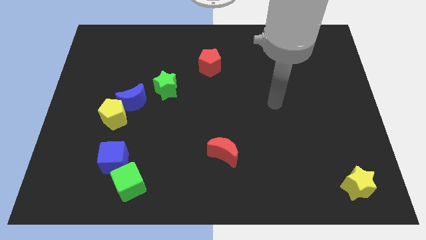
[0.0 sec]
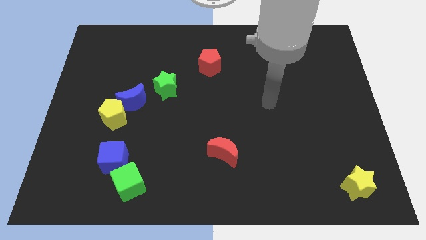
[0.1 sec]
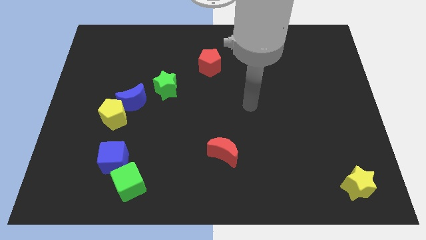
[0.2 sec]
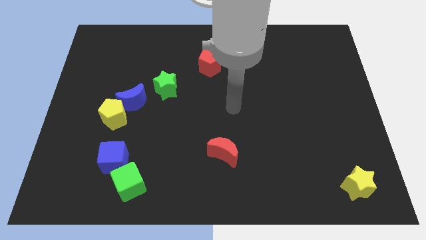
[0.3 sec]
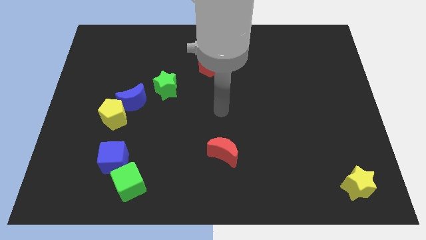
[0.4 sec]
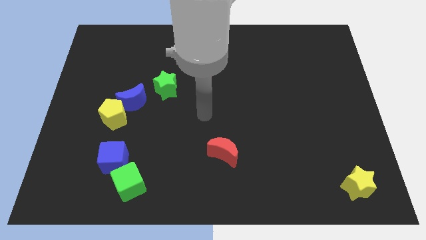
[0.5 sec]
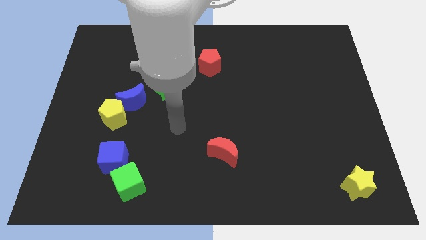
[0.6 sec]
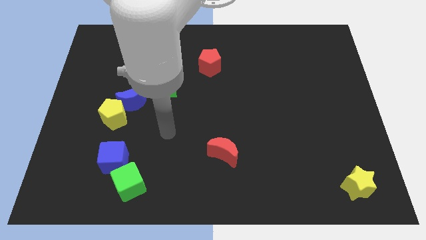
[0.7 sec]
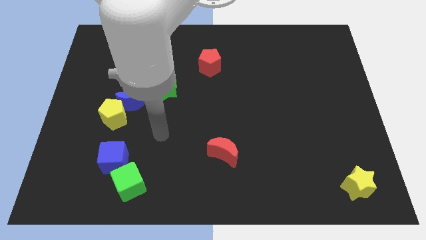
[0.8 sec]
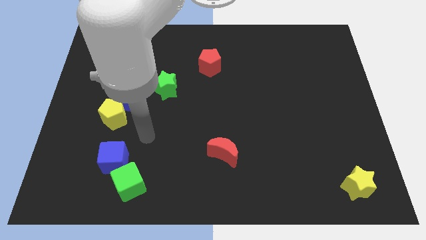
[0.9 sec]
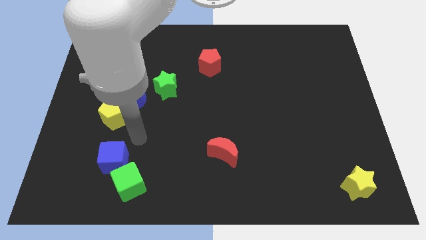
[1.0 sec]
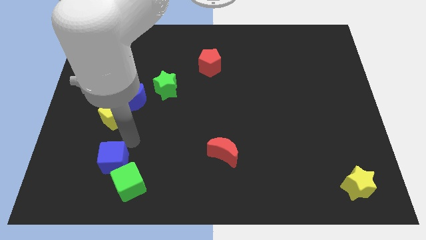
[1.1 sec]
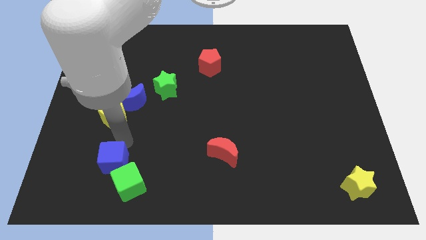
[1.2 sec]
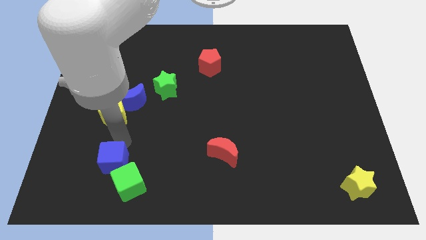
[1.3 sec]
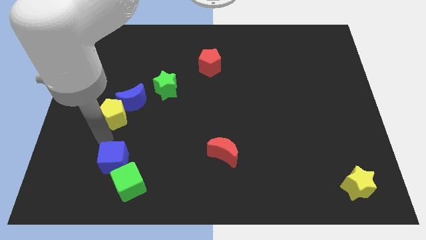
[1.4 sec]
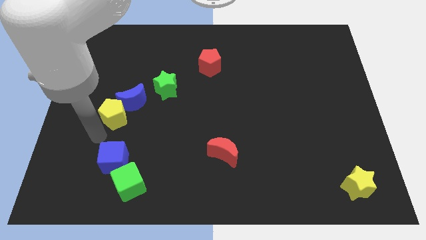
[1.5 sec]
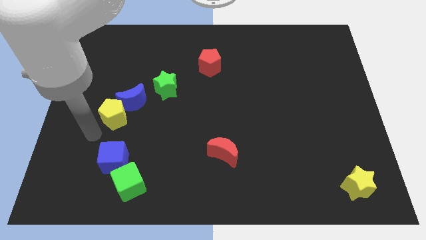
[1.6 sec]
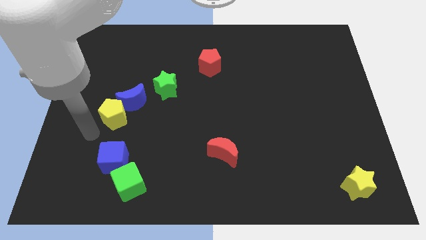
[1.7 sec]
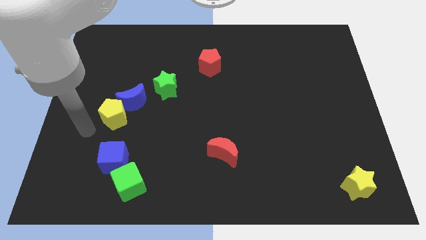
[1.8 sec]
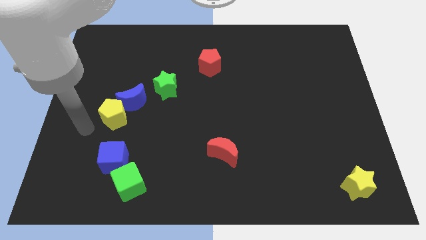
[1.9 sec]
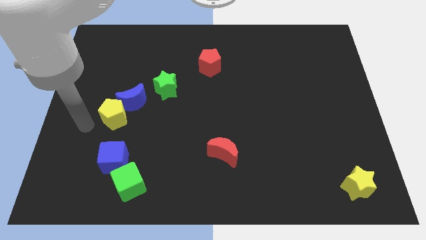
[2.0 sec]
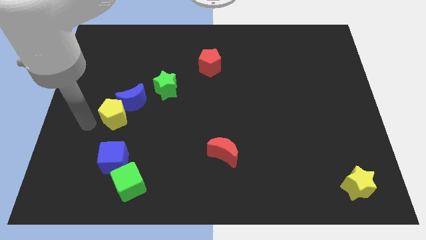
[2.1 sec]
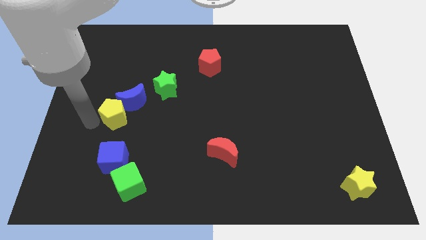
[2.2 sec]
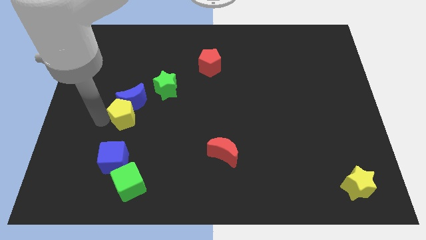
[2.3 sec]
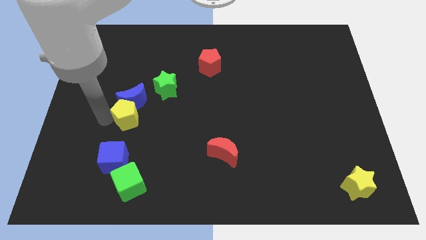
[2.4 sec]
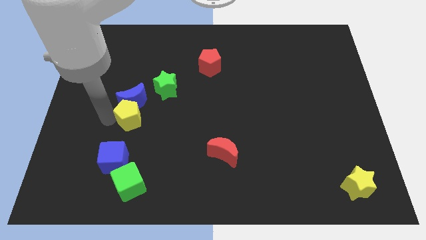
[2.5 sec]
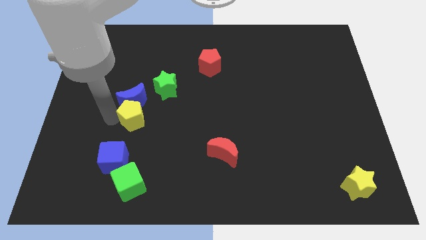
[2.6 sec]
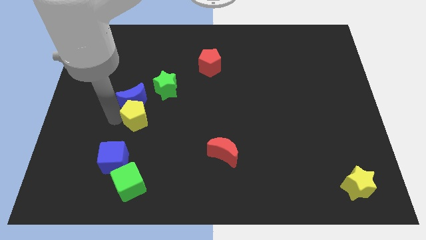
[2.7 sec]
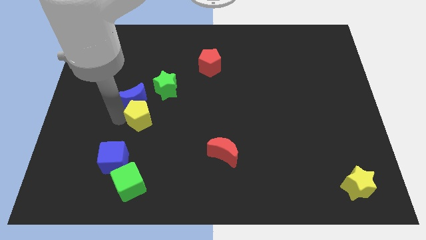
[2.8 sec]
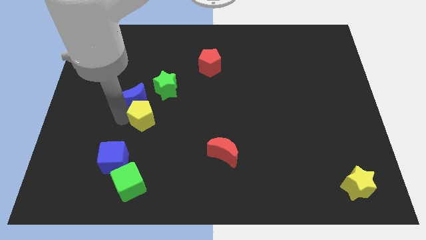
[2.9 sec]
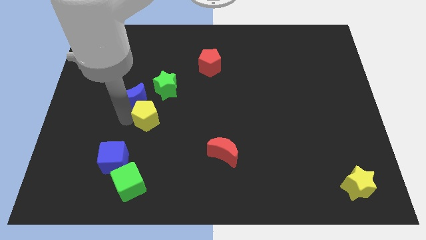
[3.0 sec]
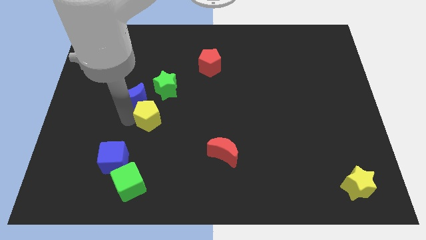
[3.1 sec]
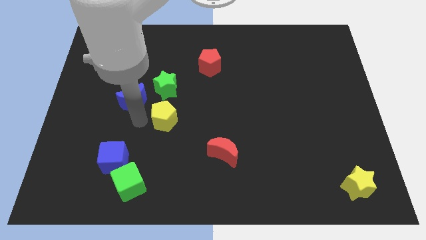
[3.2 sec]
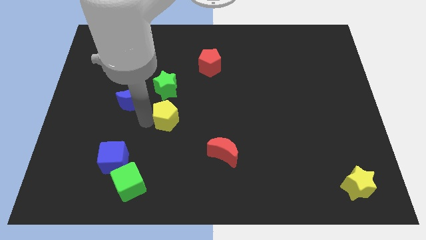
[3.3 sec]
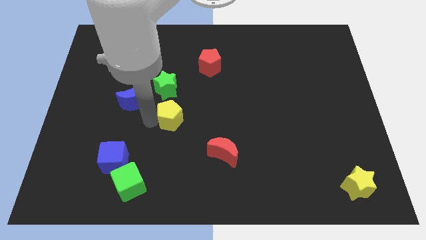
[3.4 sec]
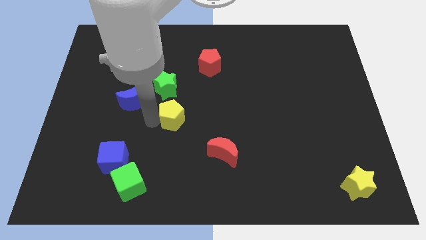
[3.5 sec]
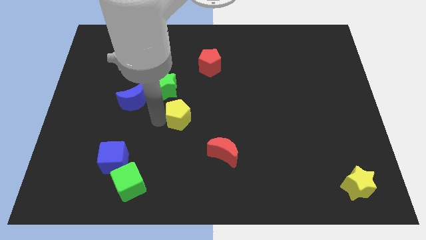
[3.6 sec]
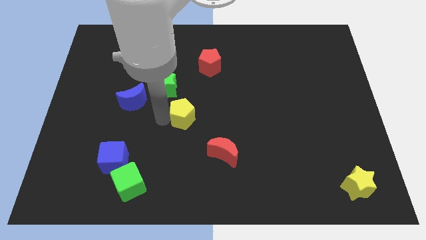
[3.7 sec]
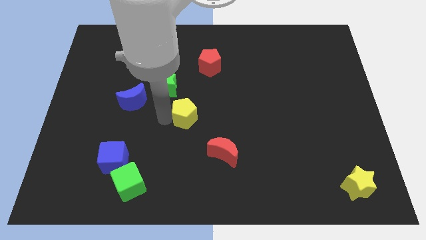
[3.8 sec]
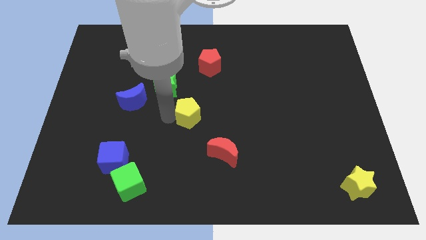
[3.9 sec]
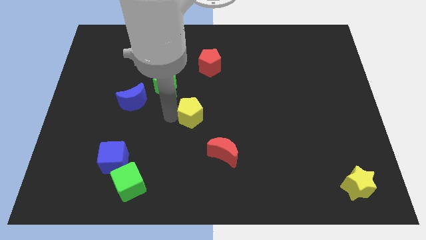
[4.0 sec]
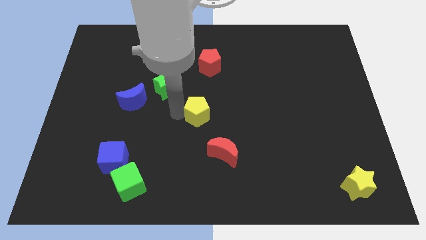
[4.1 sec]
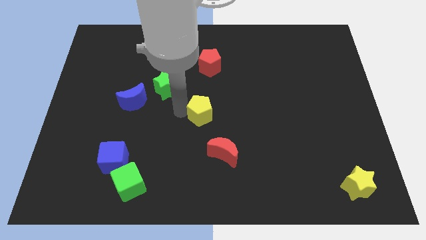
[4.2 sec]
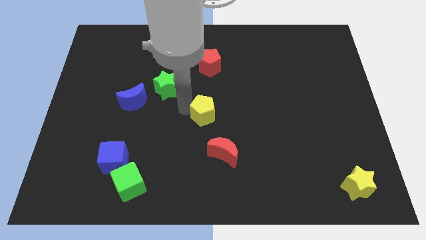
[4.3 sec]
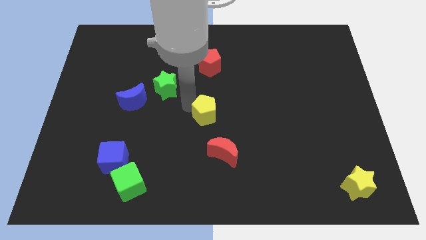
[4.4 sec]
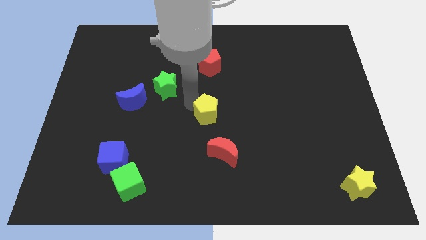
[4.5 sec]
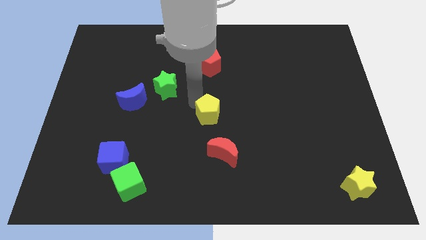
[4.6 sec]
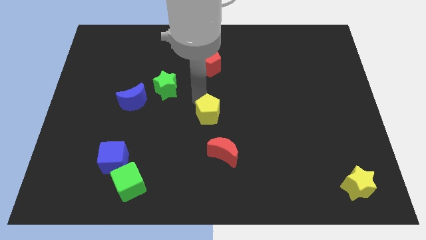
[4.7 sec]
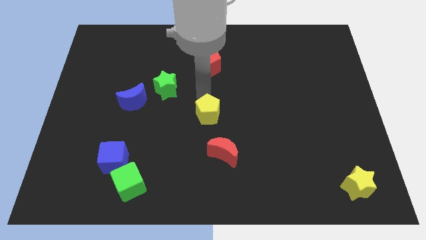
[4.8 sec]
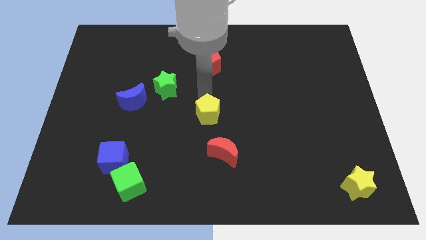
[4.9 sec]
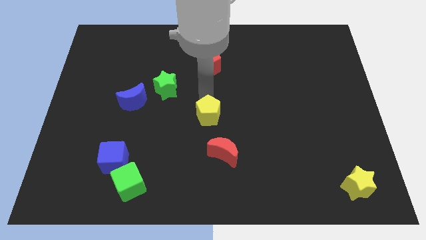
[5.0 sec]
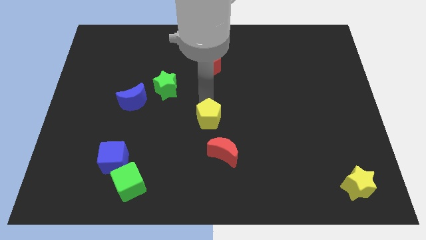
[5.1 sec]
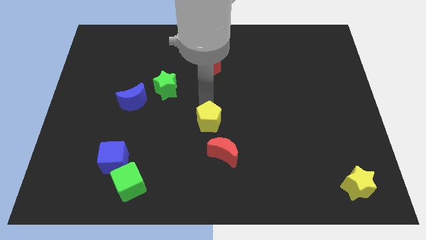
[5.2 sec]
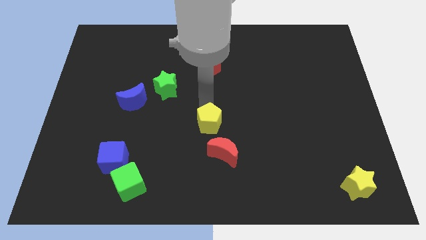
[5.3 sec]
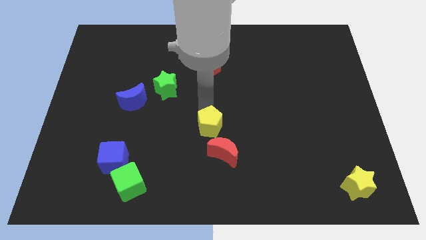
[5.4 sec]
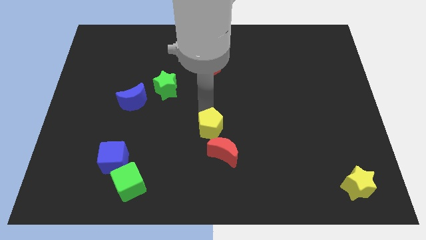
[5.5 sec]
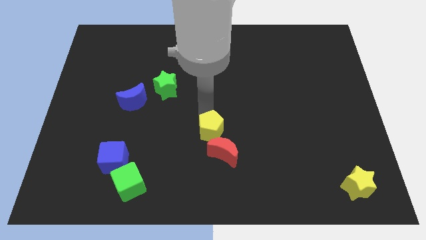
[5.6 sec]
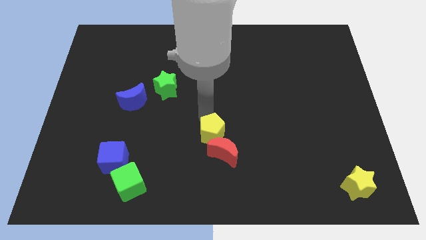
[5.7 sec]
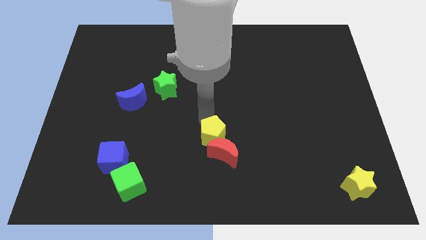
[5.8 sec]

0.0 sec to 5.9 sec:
push the yellow pentagon close to the red moon

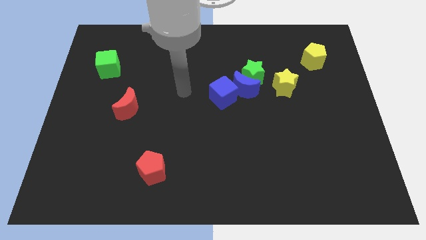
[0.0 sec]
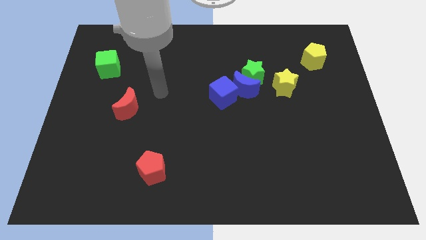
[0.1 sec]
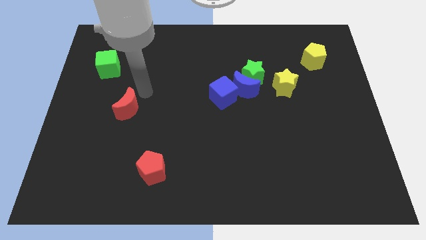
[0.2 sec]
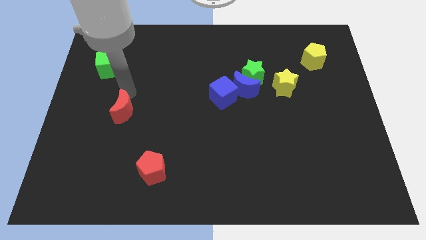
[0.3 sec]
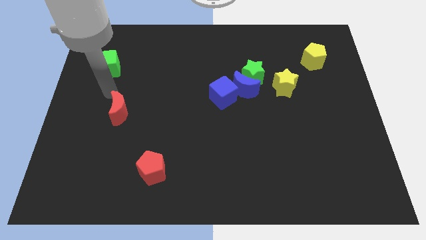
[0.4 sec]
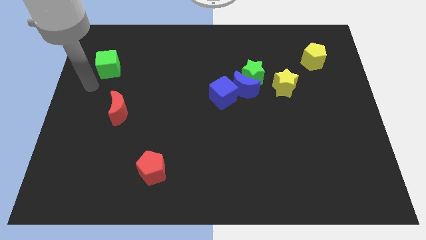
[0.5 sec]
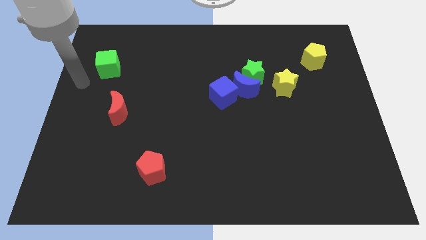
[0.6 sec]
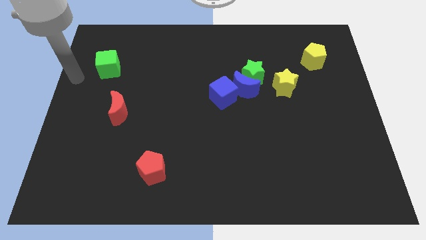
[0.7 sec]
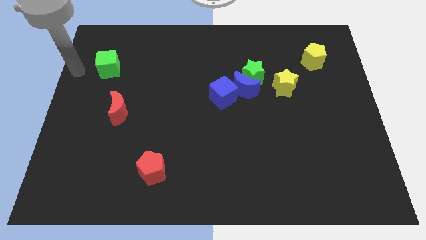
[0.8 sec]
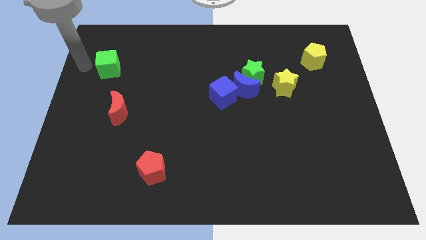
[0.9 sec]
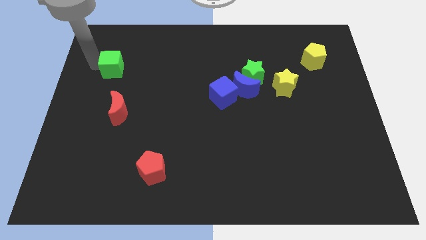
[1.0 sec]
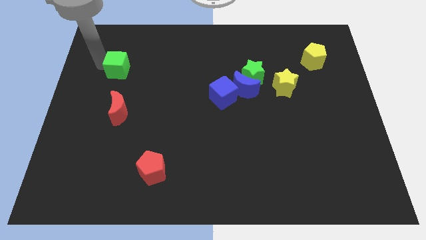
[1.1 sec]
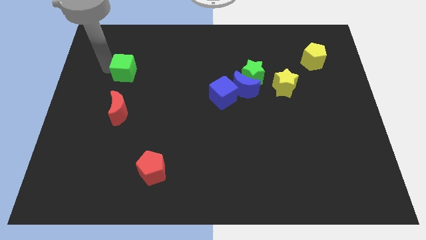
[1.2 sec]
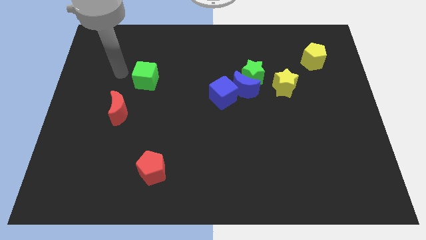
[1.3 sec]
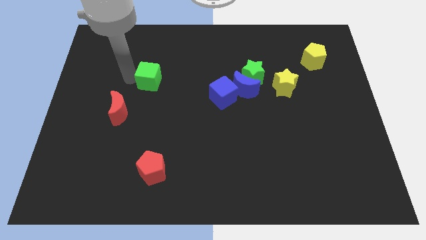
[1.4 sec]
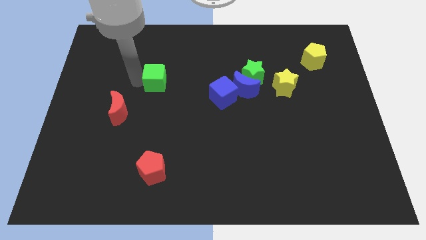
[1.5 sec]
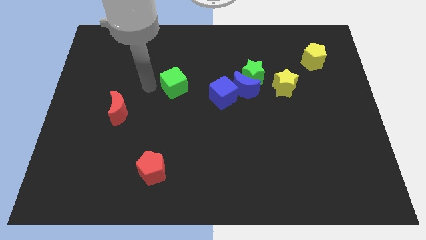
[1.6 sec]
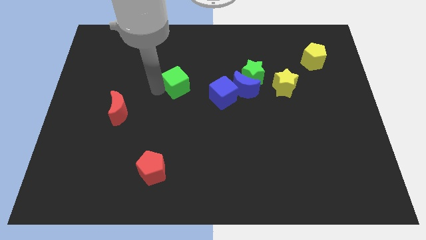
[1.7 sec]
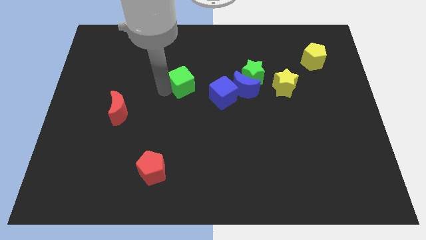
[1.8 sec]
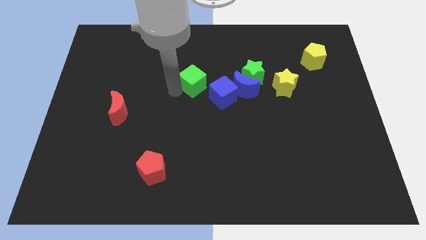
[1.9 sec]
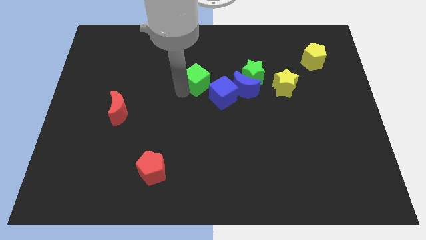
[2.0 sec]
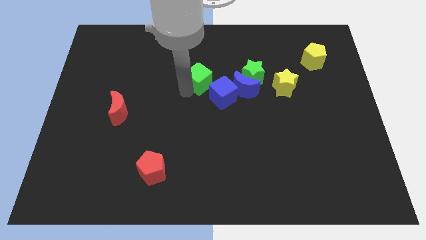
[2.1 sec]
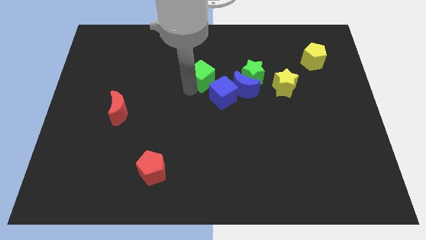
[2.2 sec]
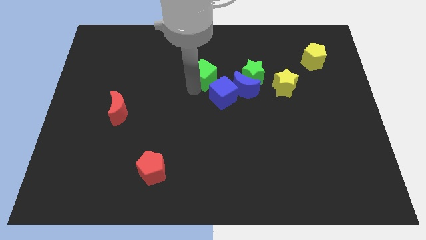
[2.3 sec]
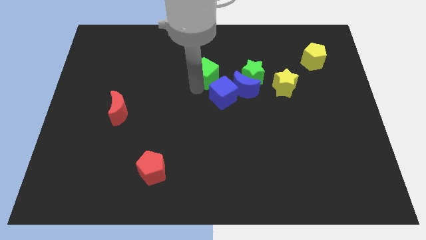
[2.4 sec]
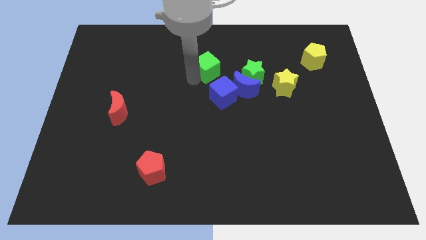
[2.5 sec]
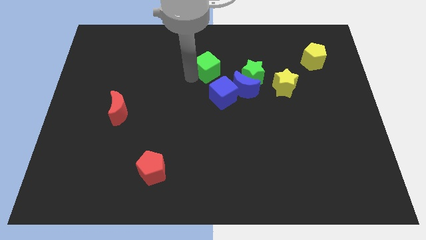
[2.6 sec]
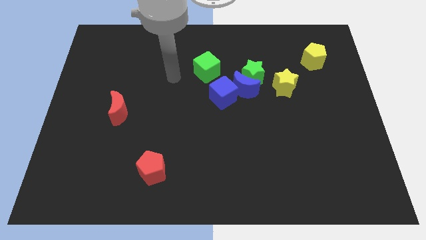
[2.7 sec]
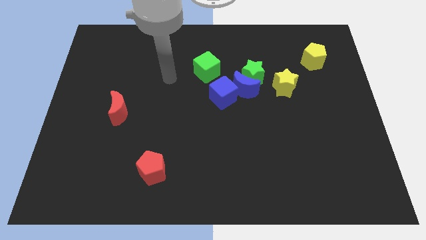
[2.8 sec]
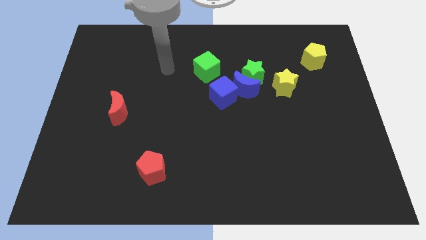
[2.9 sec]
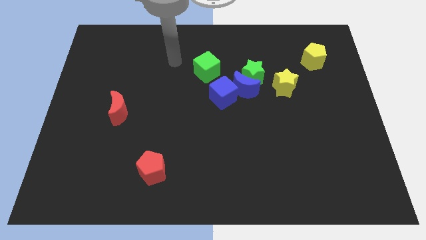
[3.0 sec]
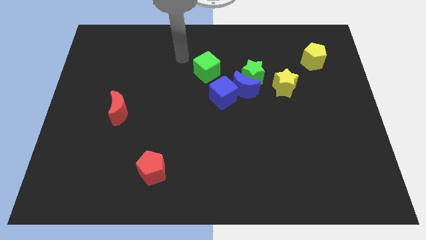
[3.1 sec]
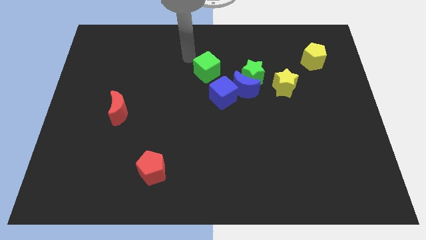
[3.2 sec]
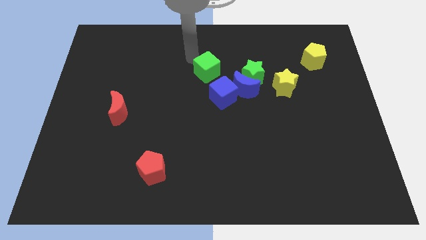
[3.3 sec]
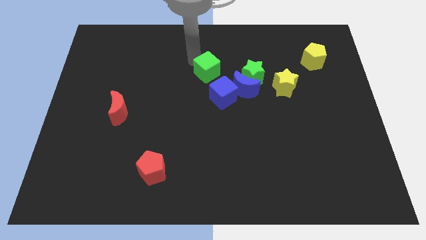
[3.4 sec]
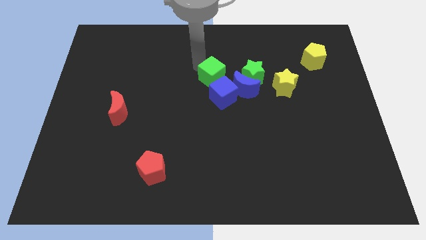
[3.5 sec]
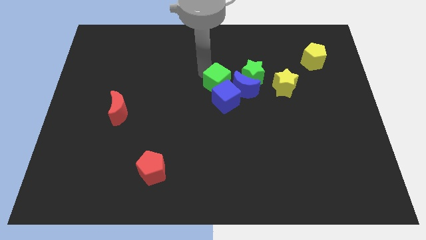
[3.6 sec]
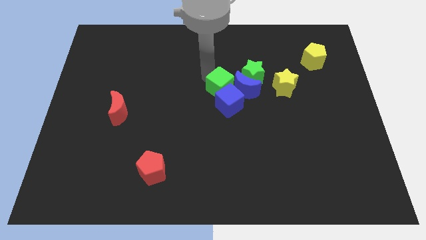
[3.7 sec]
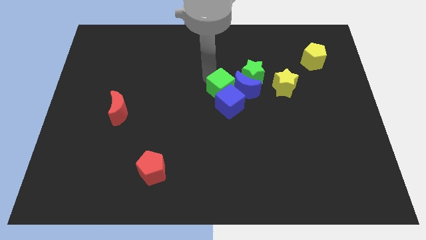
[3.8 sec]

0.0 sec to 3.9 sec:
move the green cube next to the blue cube
